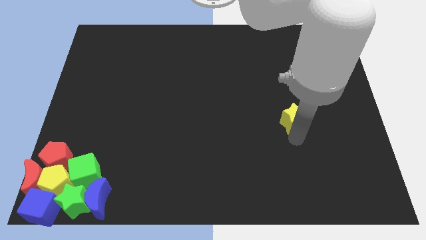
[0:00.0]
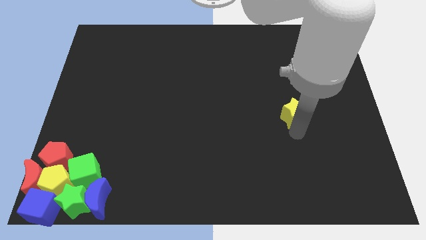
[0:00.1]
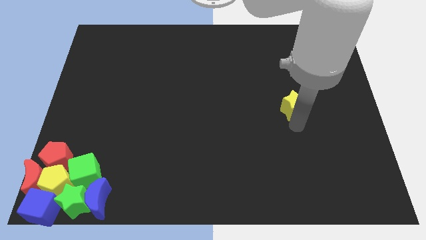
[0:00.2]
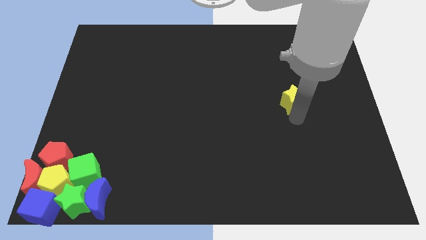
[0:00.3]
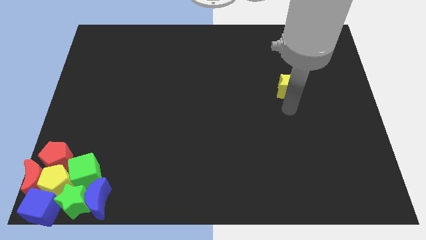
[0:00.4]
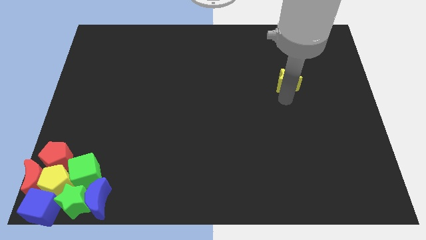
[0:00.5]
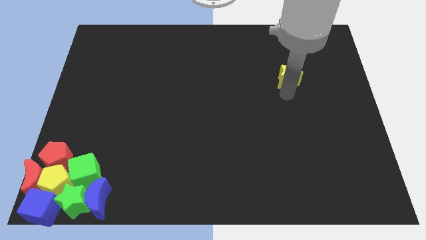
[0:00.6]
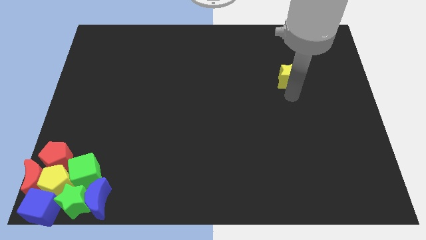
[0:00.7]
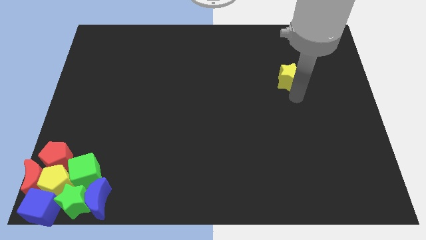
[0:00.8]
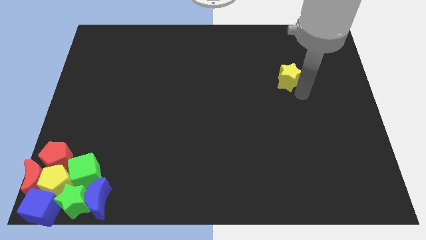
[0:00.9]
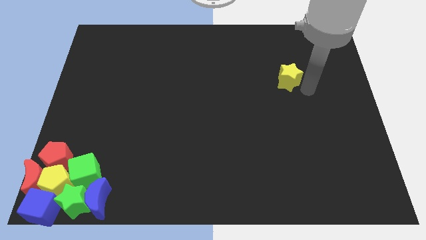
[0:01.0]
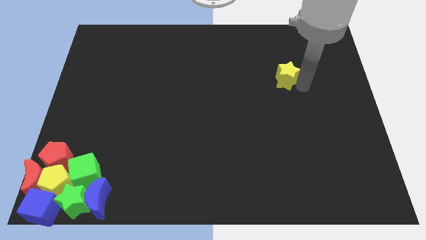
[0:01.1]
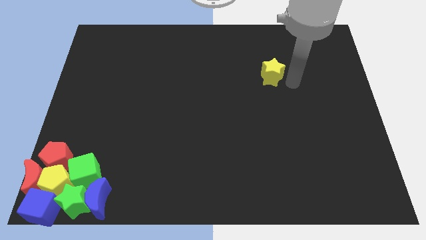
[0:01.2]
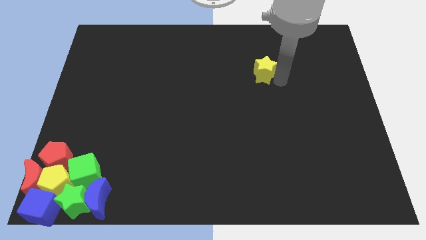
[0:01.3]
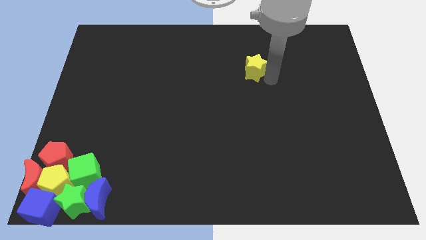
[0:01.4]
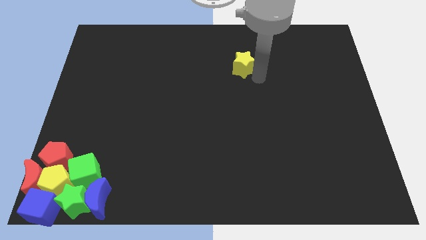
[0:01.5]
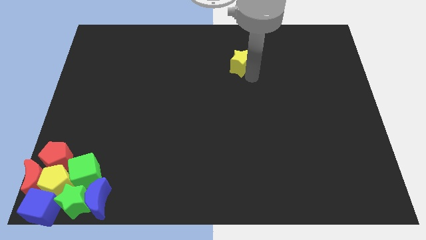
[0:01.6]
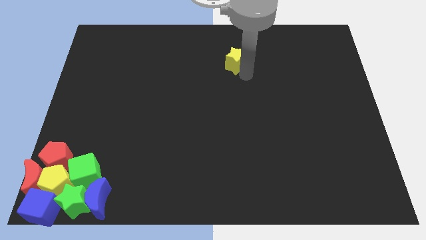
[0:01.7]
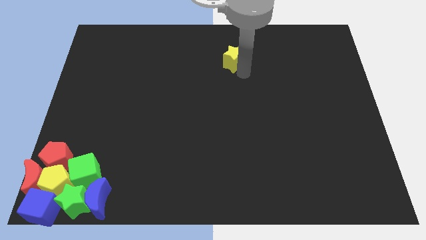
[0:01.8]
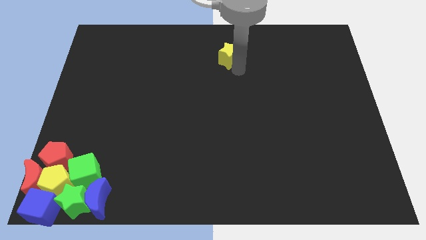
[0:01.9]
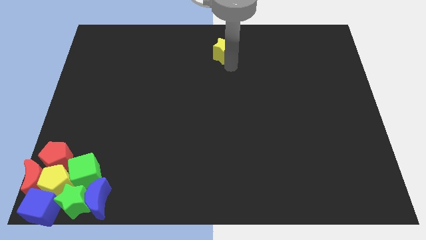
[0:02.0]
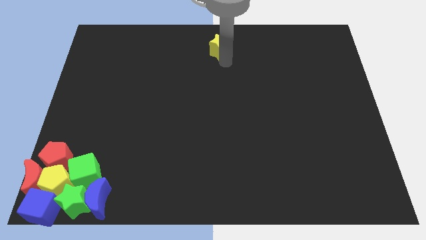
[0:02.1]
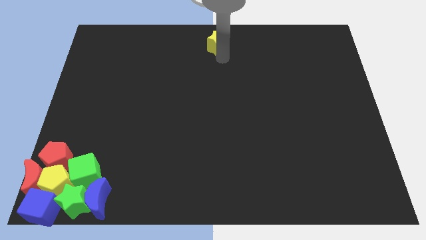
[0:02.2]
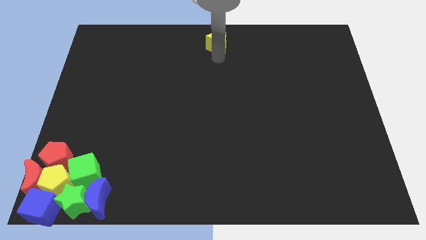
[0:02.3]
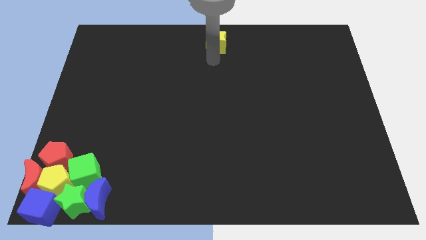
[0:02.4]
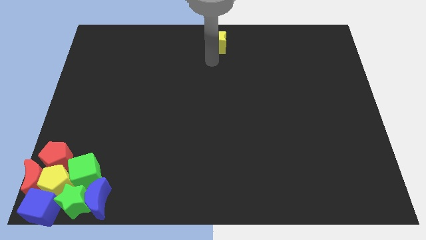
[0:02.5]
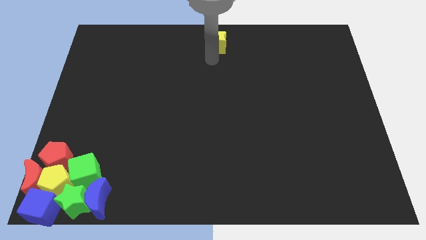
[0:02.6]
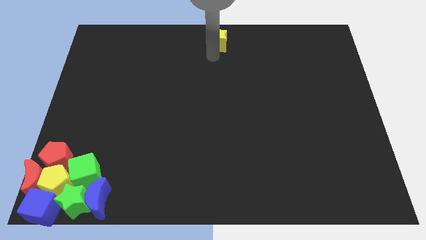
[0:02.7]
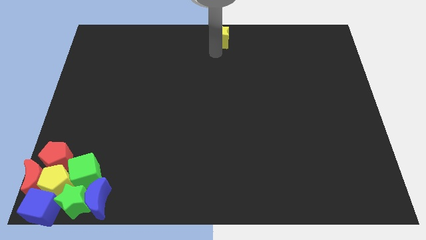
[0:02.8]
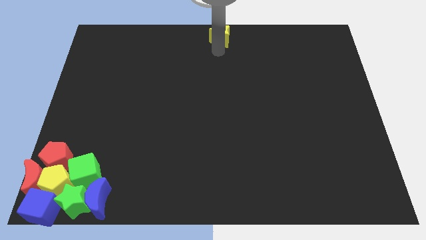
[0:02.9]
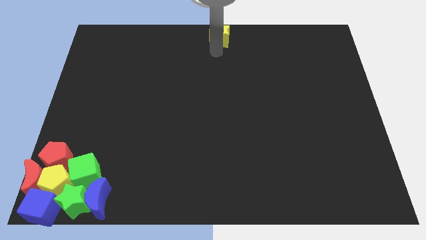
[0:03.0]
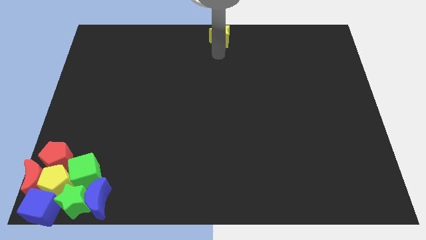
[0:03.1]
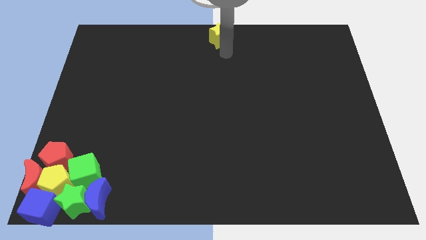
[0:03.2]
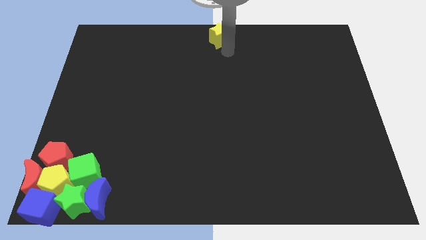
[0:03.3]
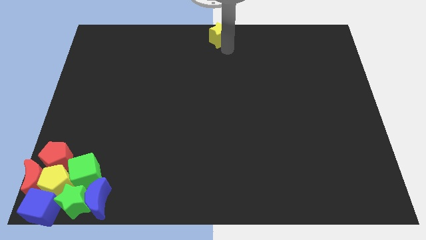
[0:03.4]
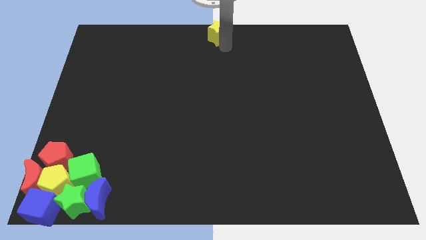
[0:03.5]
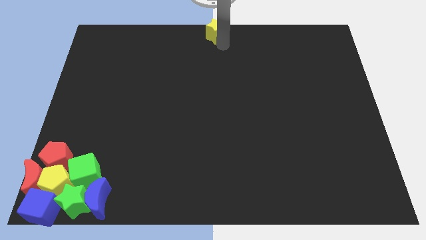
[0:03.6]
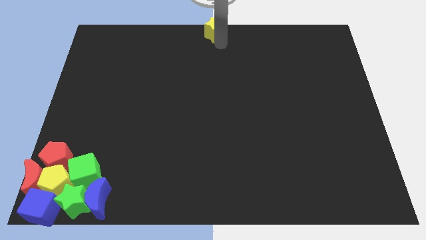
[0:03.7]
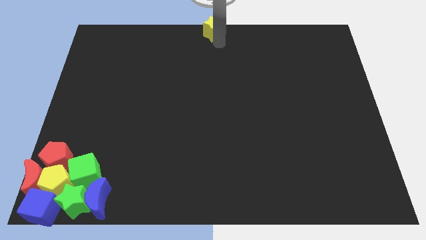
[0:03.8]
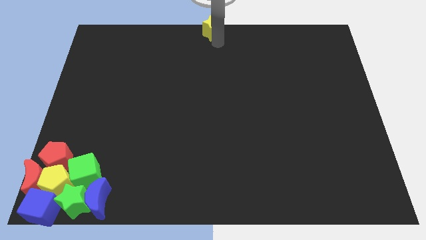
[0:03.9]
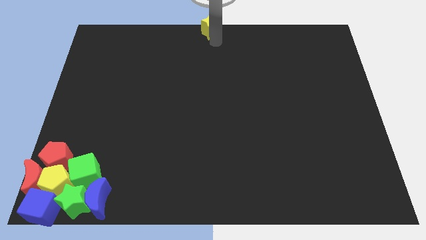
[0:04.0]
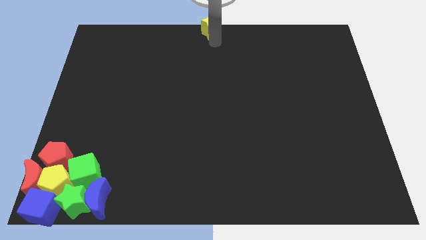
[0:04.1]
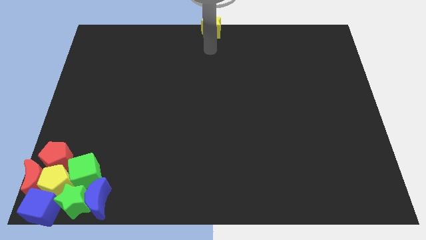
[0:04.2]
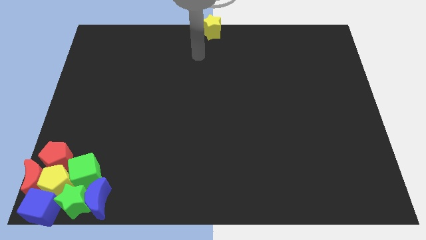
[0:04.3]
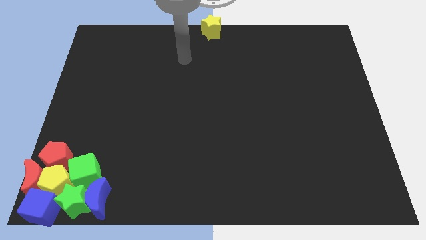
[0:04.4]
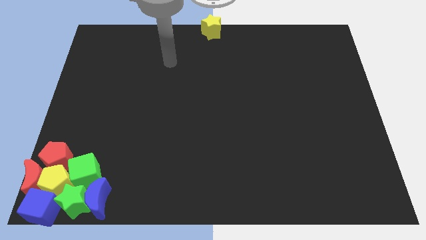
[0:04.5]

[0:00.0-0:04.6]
place the yellow star at the top center of the board

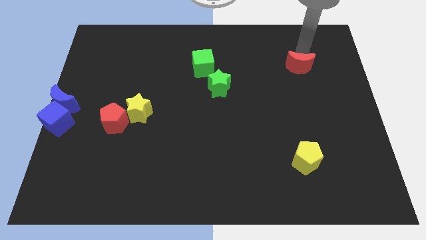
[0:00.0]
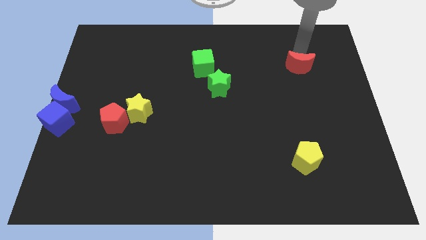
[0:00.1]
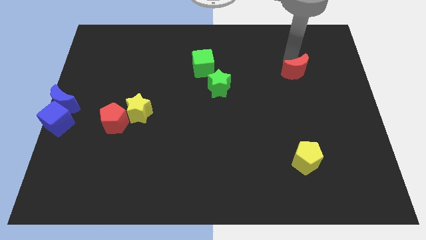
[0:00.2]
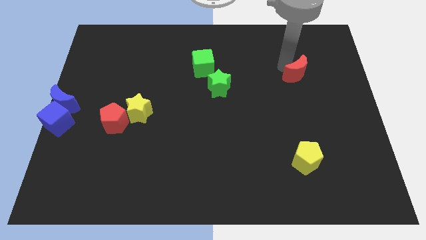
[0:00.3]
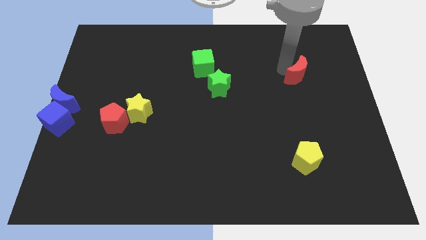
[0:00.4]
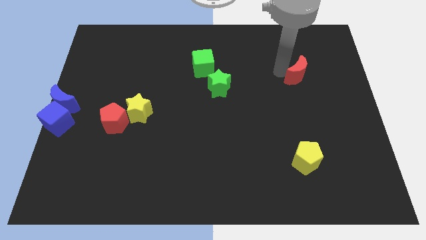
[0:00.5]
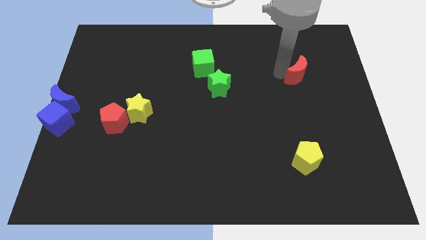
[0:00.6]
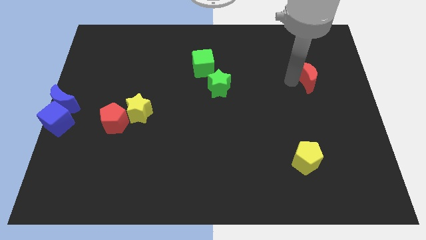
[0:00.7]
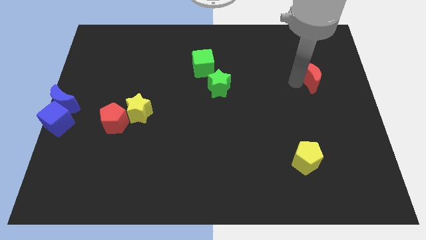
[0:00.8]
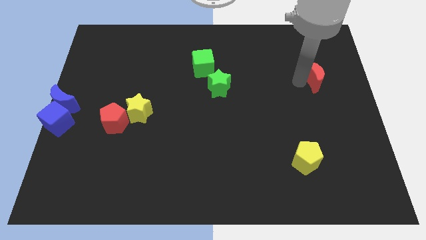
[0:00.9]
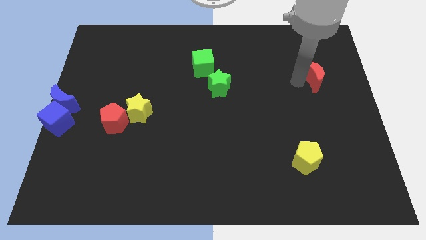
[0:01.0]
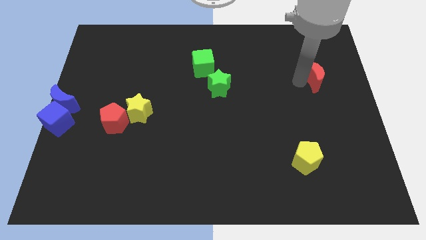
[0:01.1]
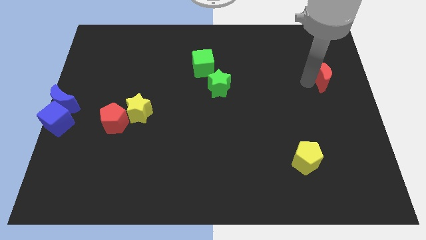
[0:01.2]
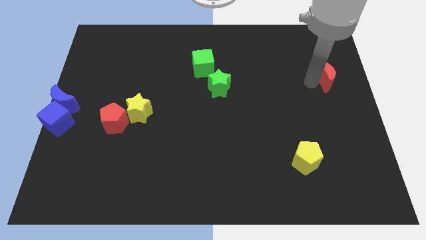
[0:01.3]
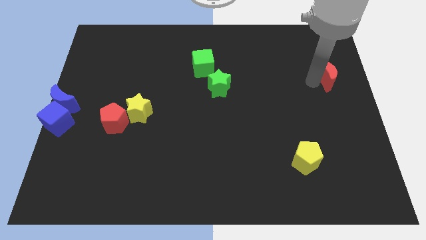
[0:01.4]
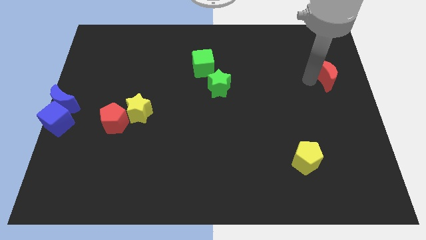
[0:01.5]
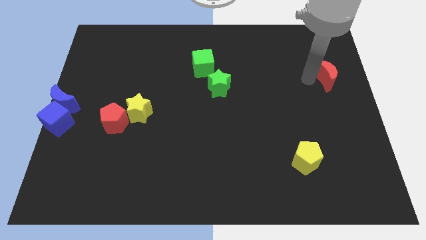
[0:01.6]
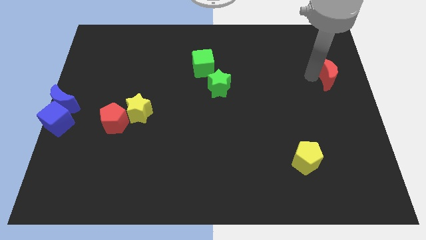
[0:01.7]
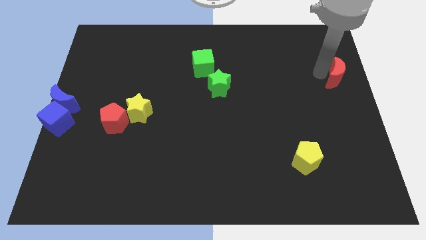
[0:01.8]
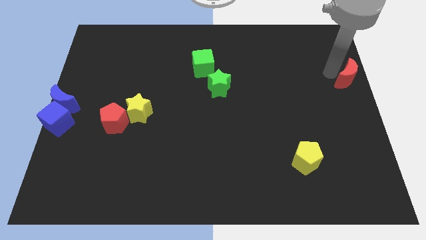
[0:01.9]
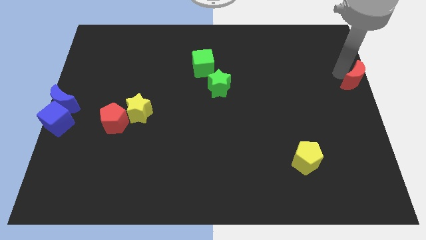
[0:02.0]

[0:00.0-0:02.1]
move the red moon slightly to the right of the board

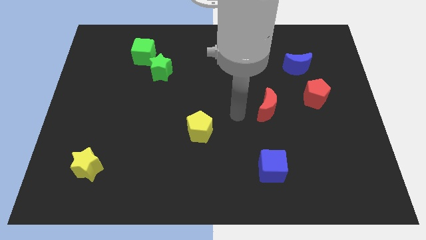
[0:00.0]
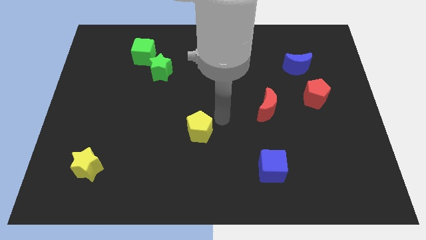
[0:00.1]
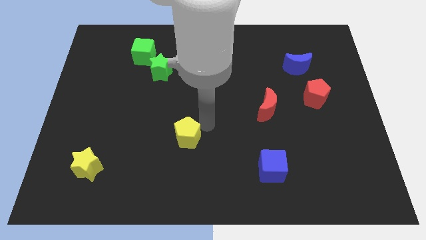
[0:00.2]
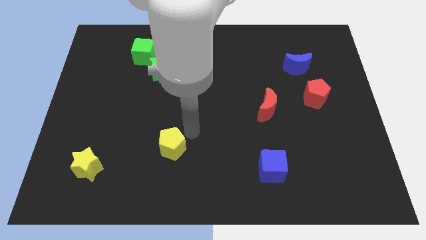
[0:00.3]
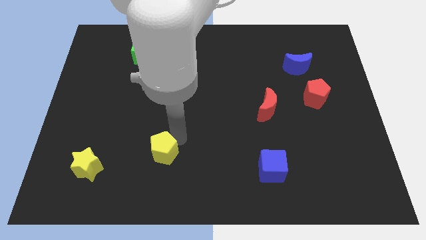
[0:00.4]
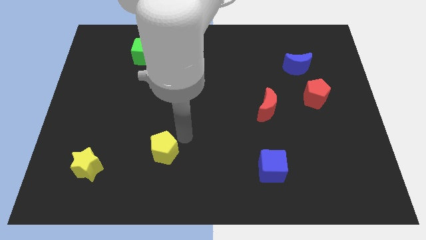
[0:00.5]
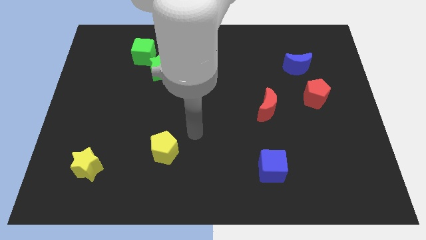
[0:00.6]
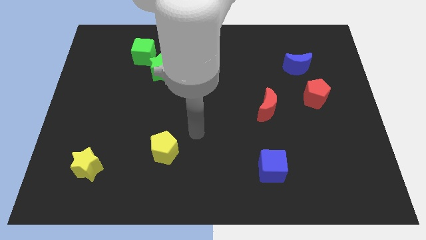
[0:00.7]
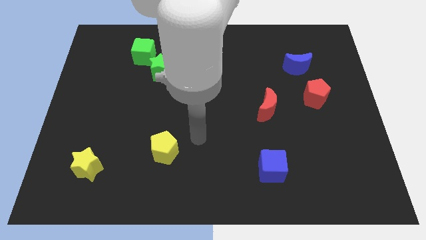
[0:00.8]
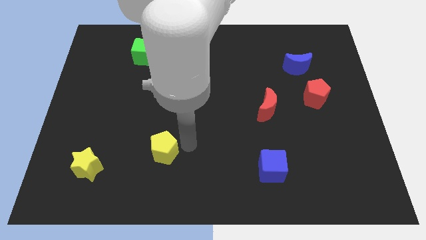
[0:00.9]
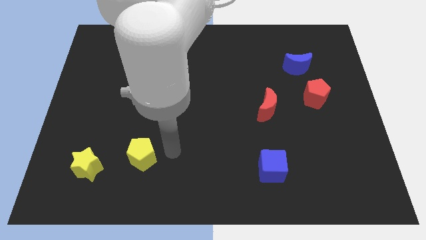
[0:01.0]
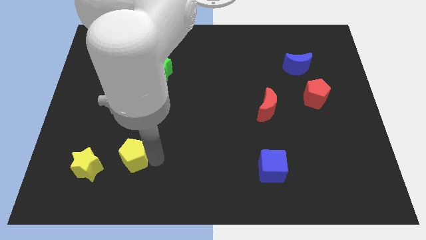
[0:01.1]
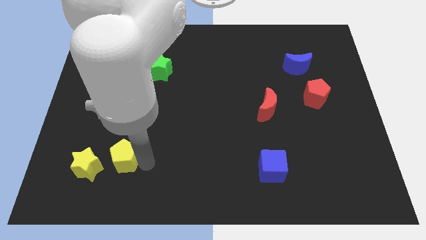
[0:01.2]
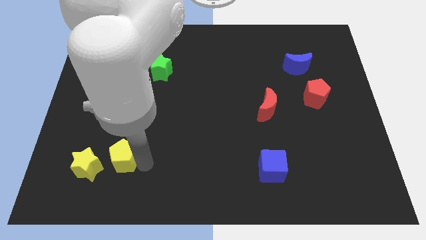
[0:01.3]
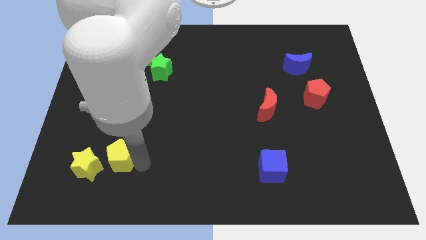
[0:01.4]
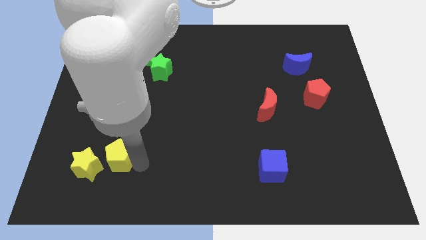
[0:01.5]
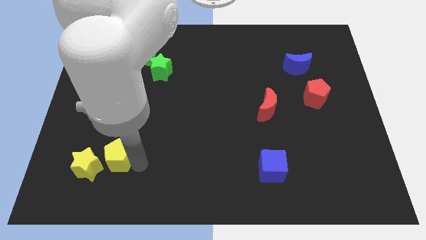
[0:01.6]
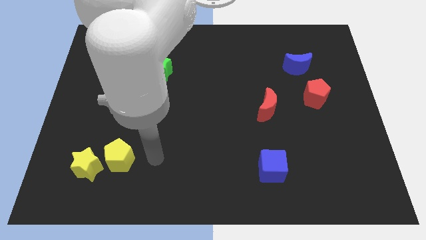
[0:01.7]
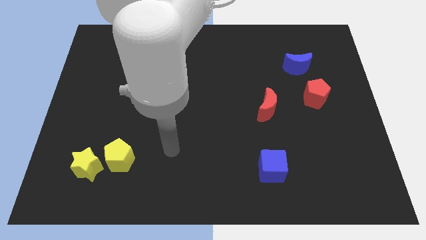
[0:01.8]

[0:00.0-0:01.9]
move the yellow pentagon to the right of the yellow star

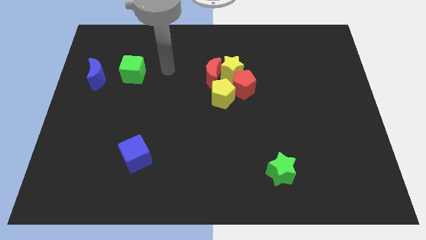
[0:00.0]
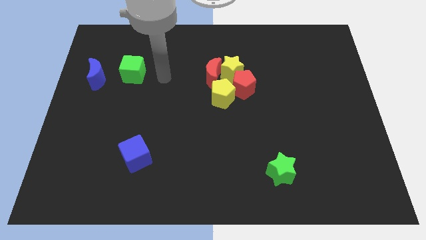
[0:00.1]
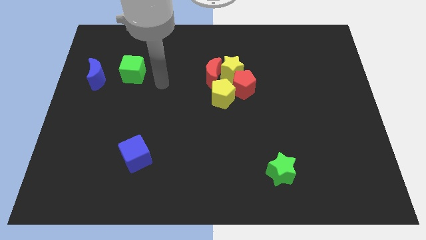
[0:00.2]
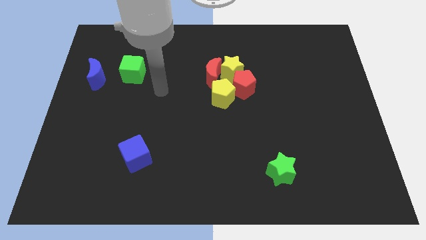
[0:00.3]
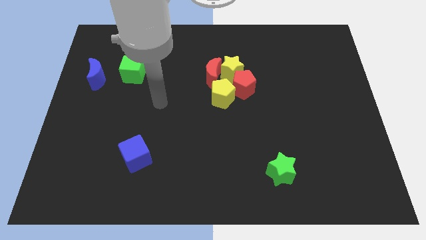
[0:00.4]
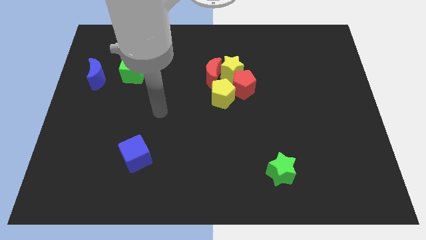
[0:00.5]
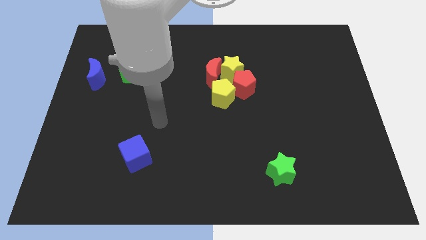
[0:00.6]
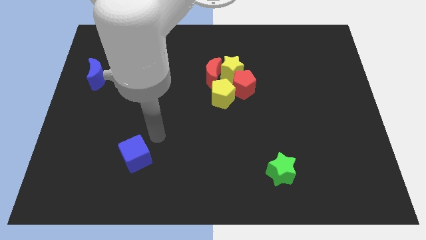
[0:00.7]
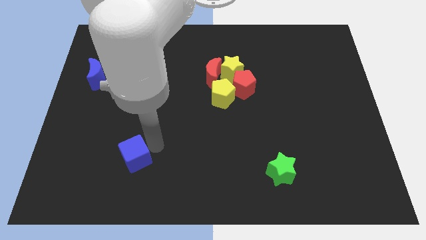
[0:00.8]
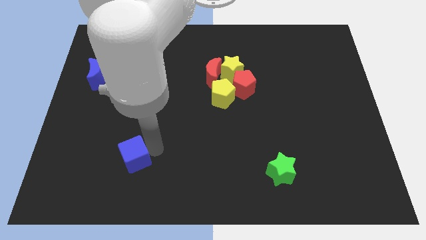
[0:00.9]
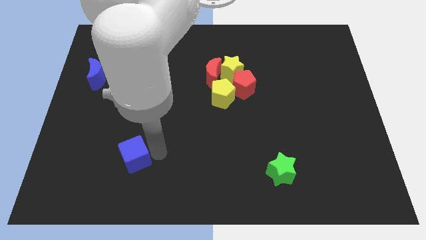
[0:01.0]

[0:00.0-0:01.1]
point your arm at the right of the blue cube
